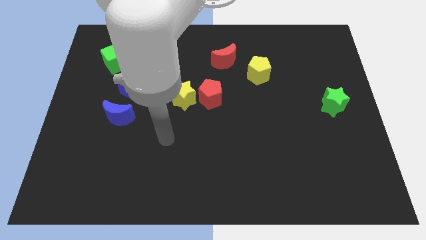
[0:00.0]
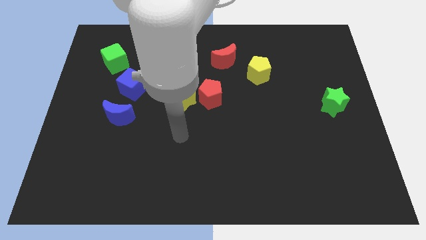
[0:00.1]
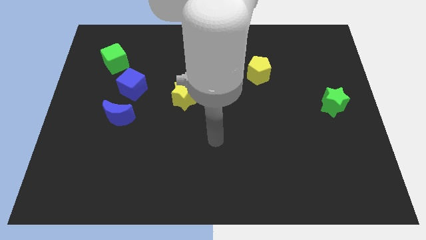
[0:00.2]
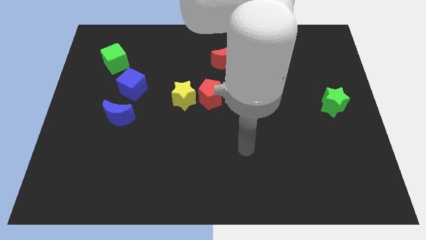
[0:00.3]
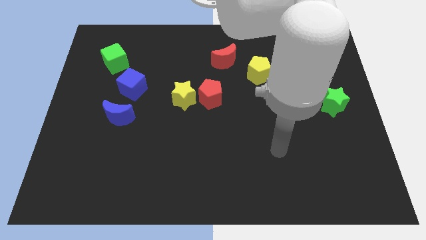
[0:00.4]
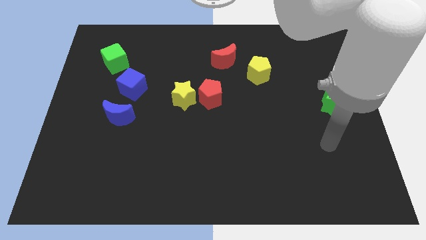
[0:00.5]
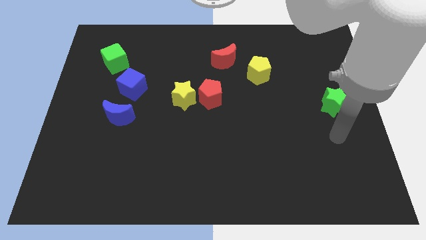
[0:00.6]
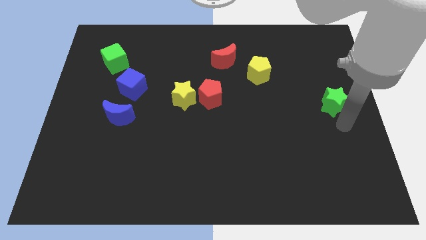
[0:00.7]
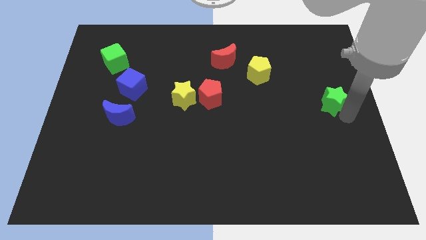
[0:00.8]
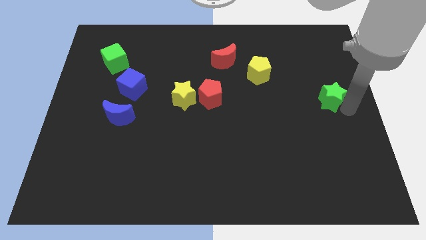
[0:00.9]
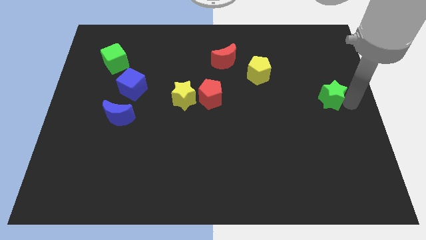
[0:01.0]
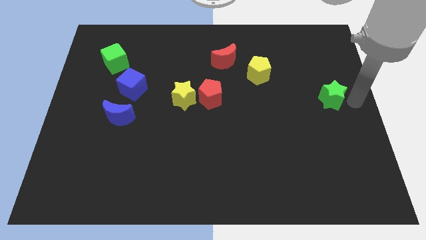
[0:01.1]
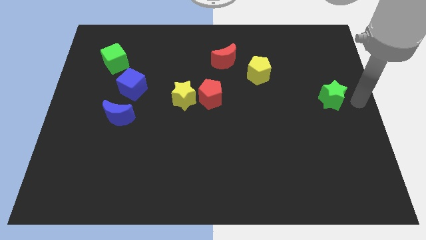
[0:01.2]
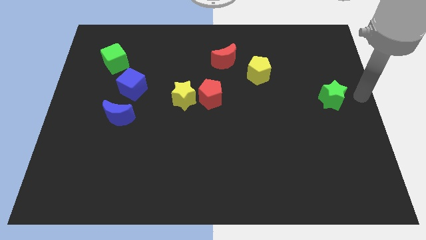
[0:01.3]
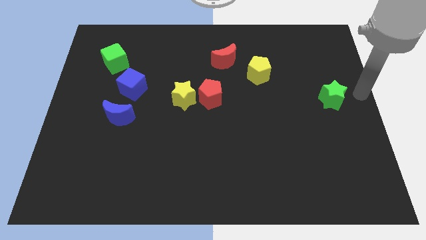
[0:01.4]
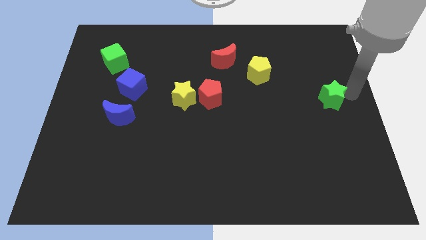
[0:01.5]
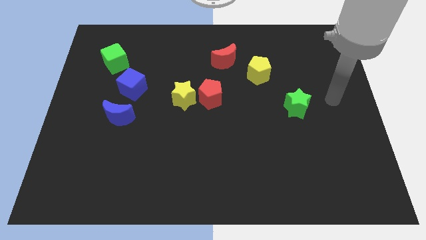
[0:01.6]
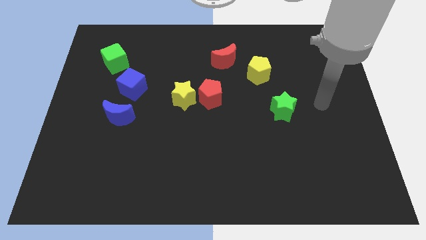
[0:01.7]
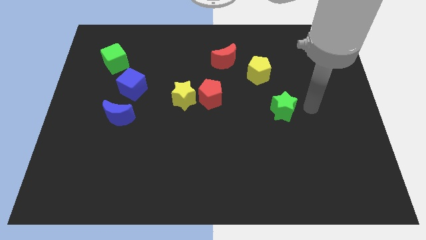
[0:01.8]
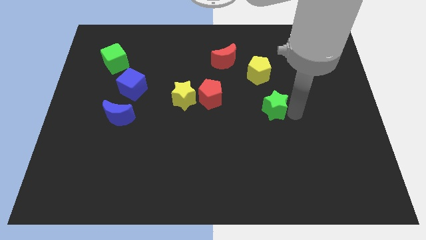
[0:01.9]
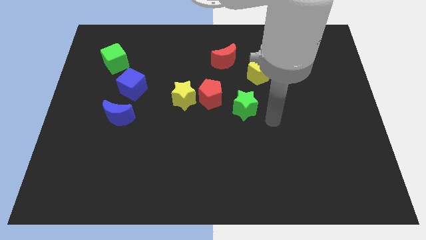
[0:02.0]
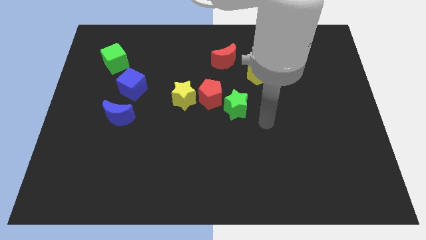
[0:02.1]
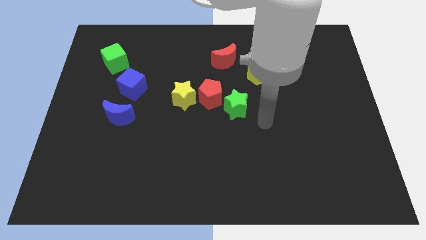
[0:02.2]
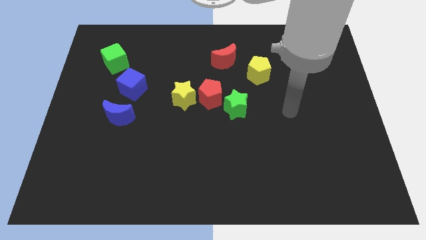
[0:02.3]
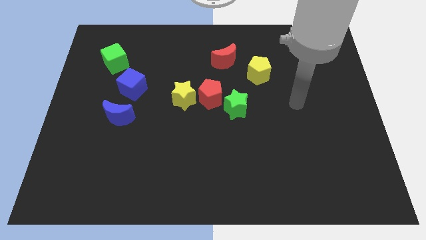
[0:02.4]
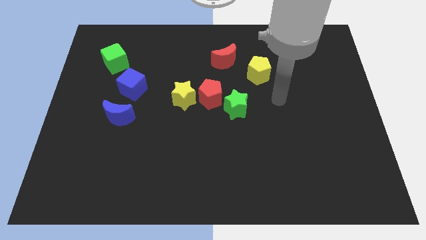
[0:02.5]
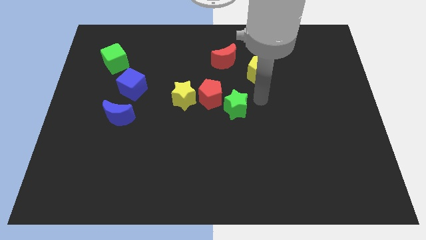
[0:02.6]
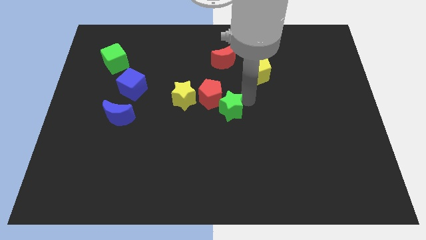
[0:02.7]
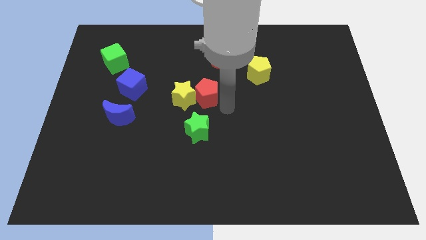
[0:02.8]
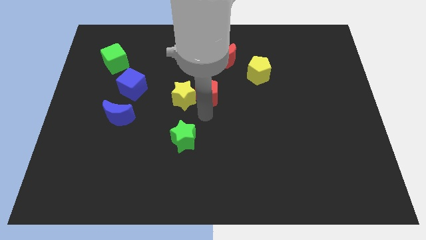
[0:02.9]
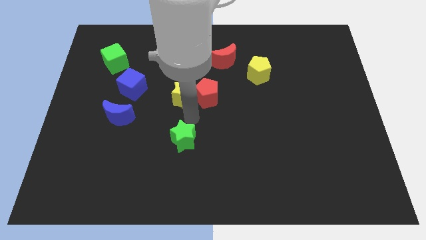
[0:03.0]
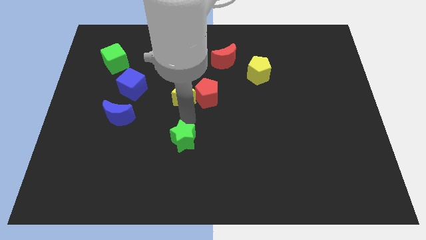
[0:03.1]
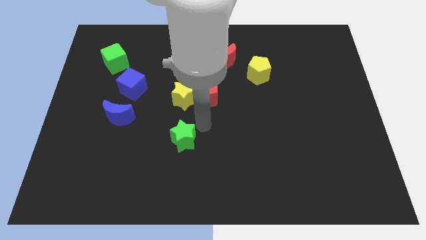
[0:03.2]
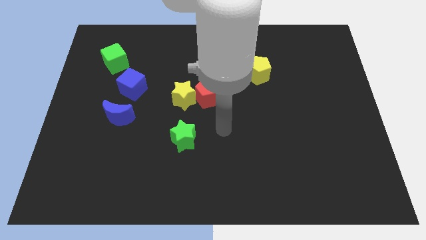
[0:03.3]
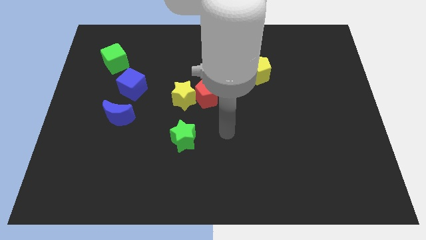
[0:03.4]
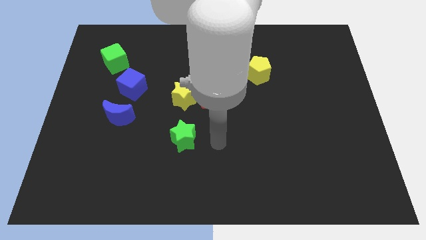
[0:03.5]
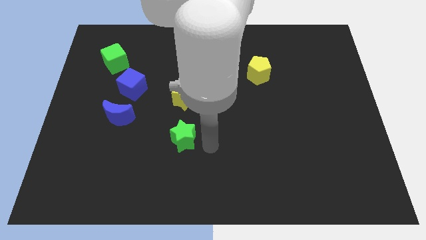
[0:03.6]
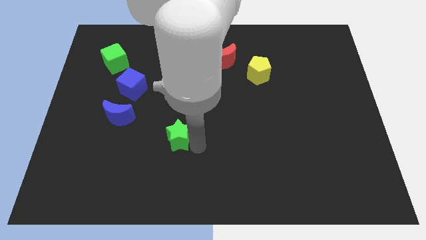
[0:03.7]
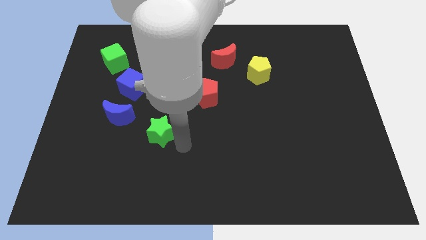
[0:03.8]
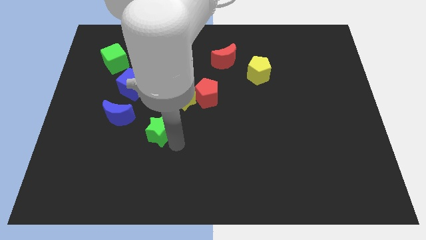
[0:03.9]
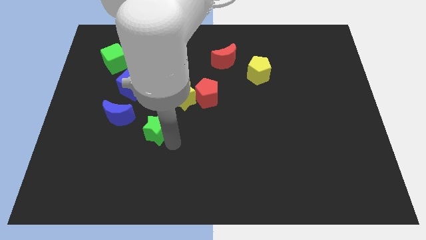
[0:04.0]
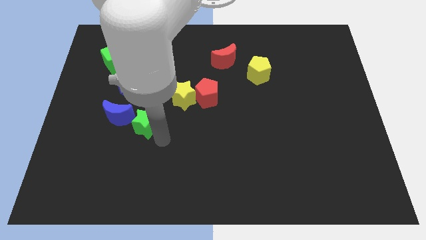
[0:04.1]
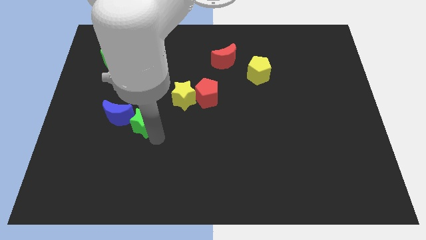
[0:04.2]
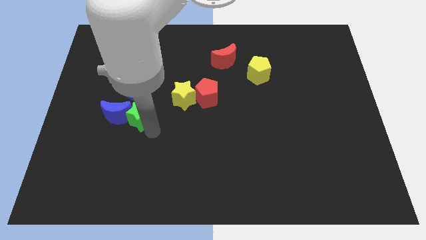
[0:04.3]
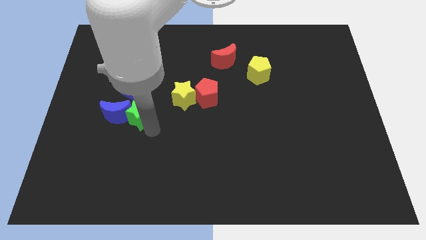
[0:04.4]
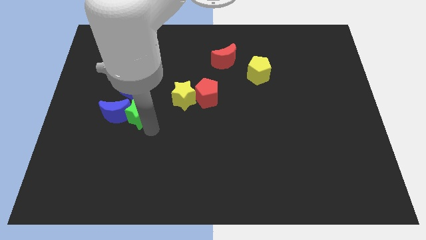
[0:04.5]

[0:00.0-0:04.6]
move the green star towards the blue moon

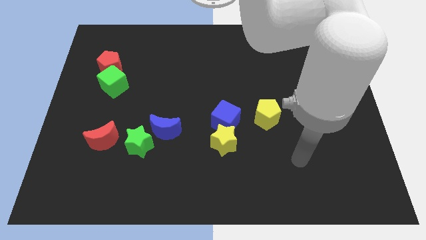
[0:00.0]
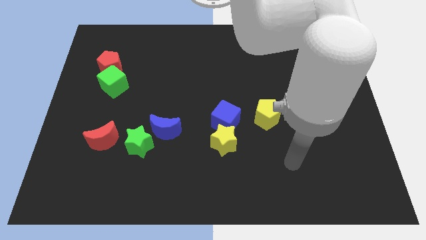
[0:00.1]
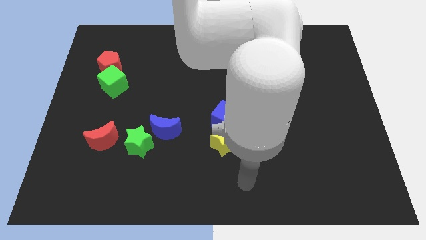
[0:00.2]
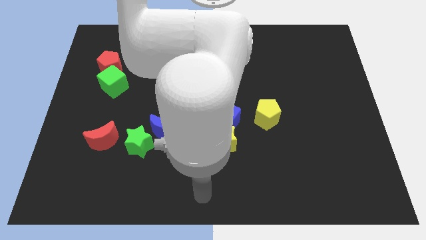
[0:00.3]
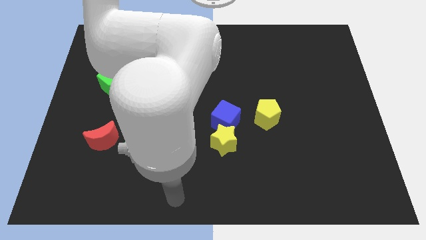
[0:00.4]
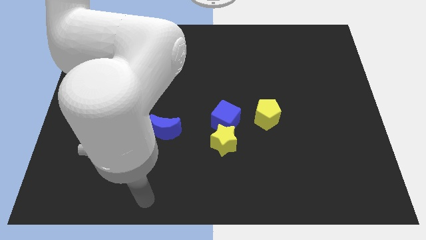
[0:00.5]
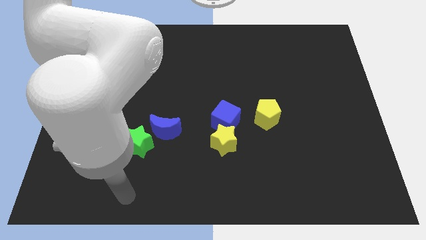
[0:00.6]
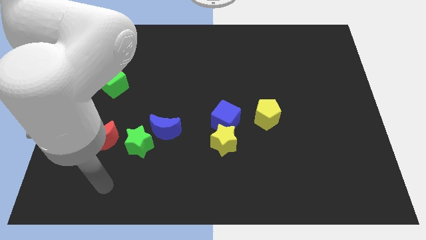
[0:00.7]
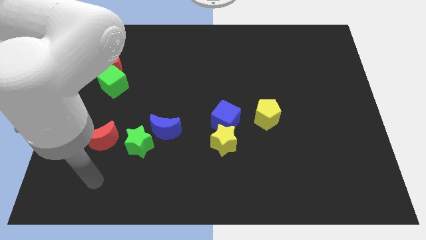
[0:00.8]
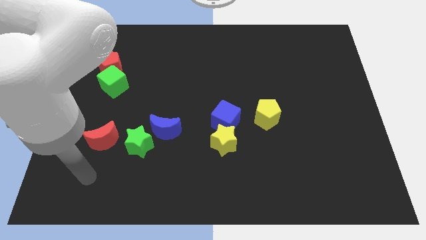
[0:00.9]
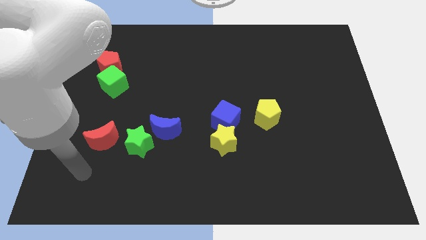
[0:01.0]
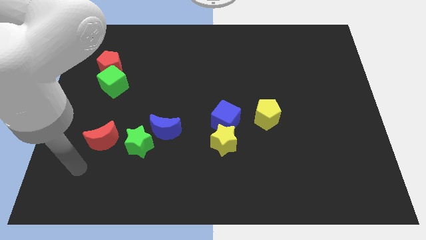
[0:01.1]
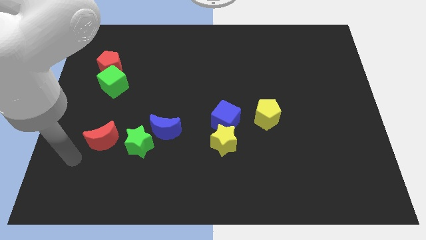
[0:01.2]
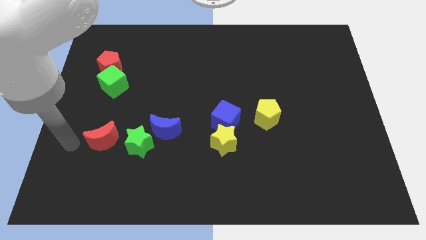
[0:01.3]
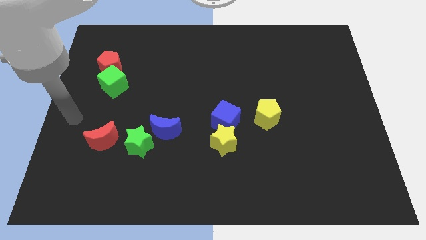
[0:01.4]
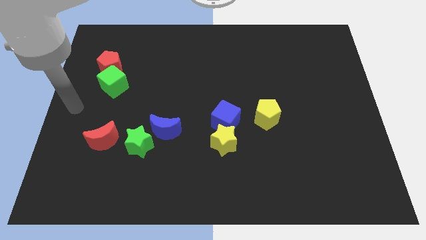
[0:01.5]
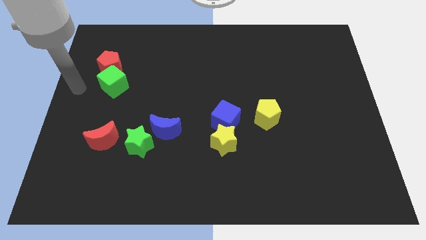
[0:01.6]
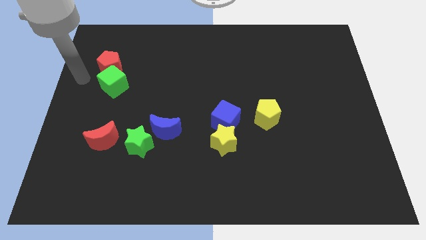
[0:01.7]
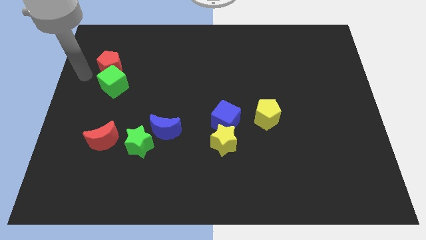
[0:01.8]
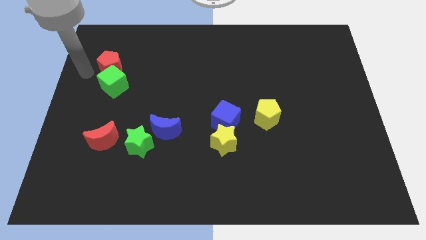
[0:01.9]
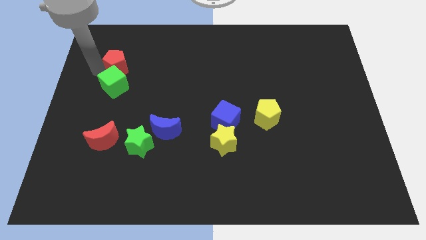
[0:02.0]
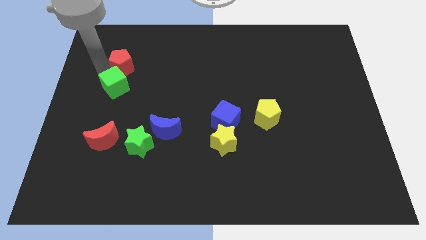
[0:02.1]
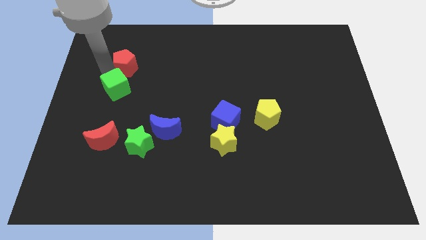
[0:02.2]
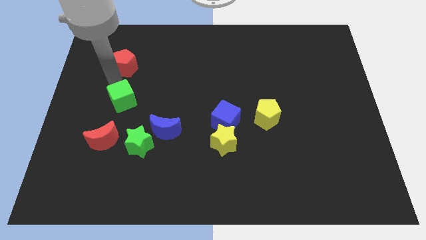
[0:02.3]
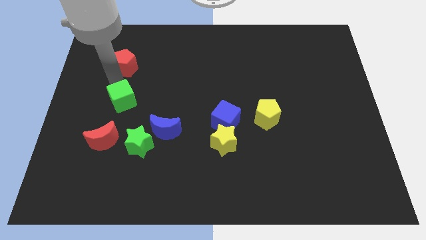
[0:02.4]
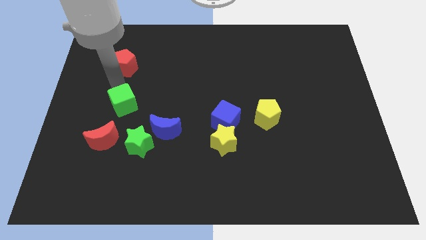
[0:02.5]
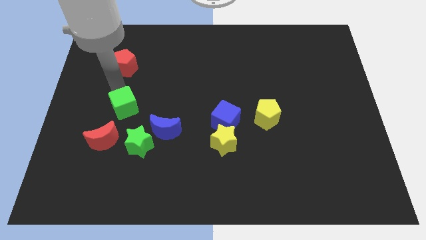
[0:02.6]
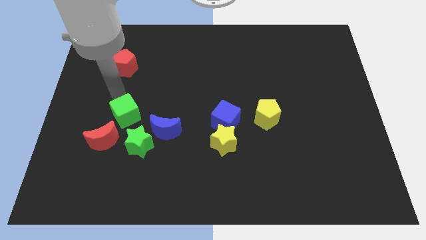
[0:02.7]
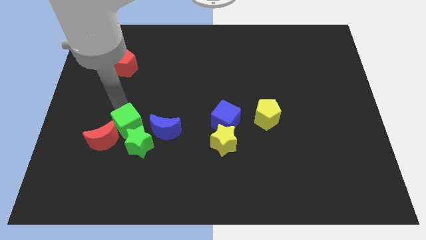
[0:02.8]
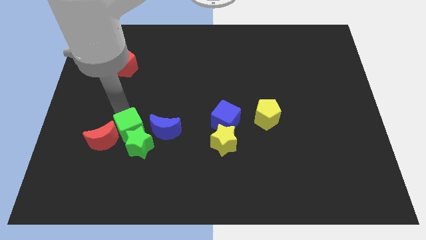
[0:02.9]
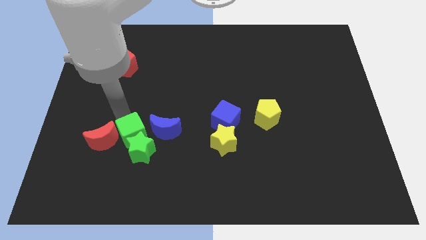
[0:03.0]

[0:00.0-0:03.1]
move the green cube to the green star

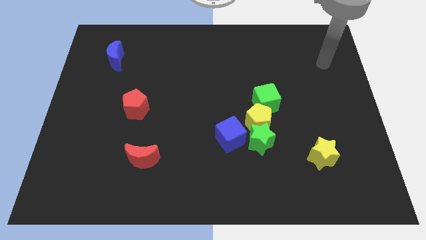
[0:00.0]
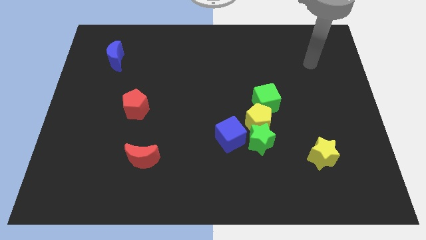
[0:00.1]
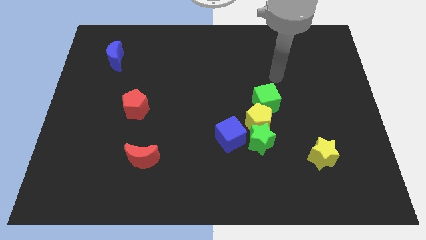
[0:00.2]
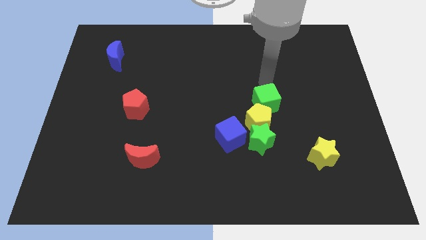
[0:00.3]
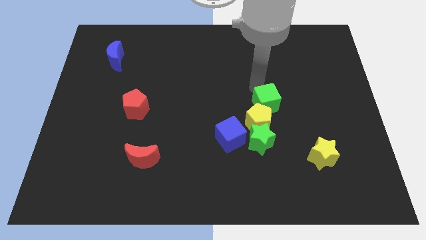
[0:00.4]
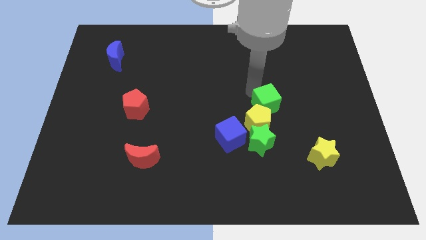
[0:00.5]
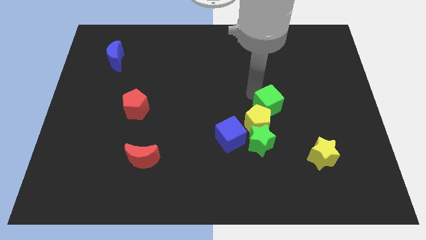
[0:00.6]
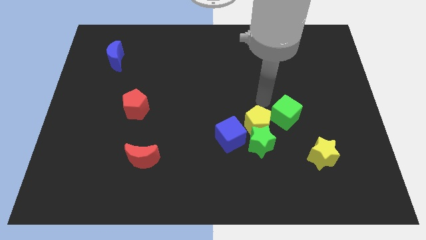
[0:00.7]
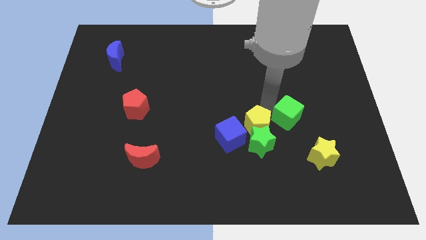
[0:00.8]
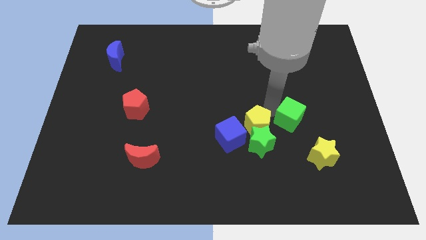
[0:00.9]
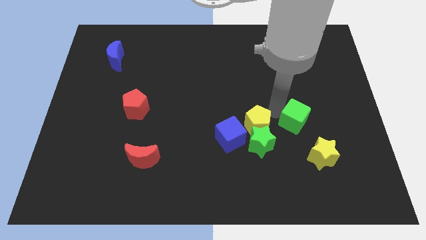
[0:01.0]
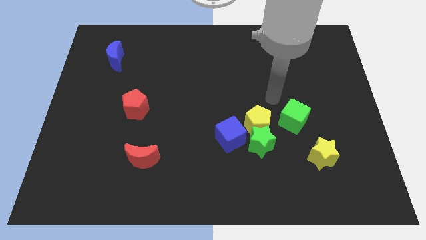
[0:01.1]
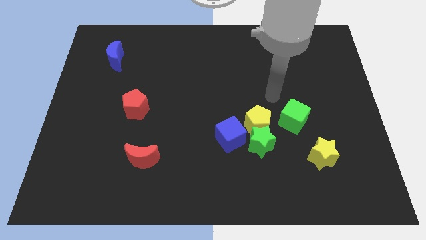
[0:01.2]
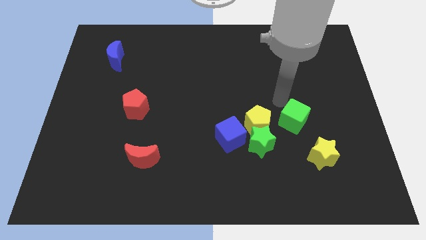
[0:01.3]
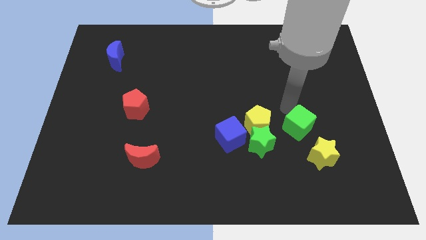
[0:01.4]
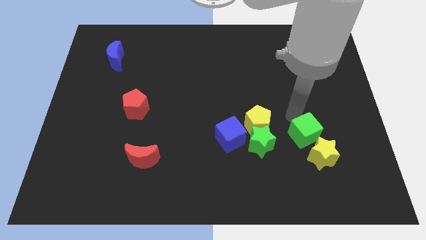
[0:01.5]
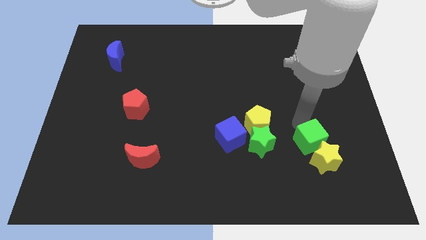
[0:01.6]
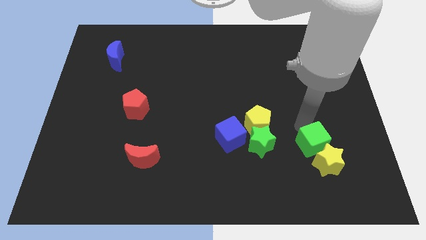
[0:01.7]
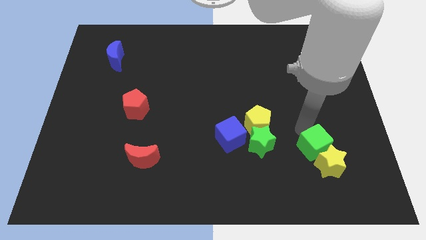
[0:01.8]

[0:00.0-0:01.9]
put the green cube close to the yellow star
